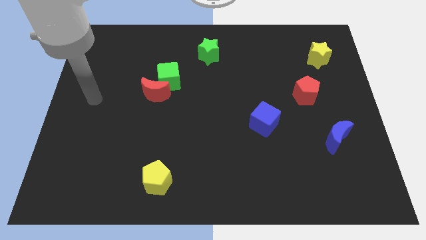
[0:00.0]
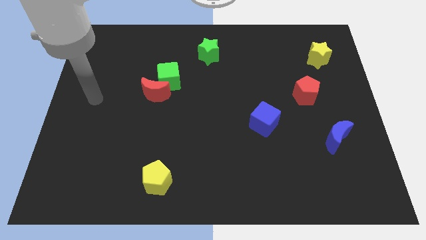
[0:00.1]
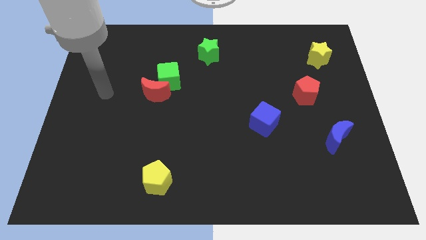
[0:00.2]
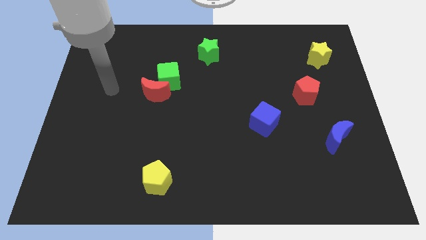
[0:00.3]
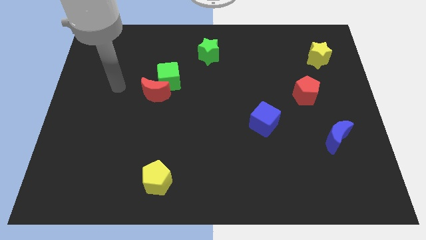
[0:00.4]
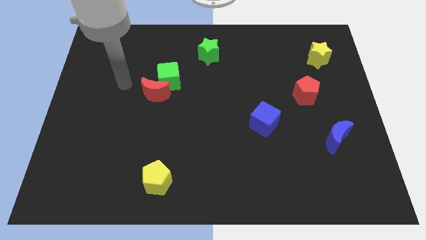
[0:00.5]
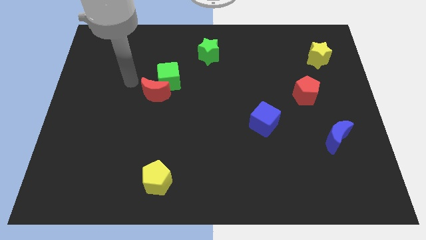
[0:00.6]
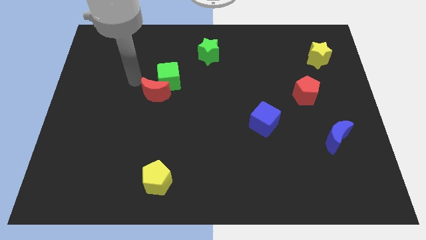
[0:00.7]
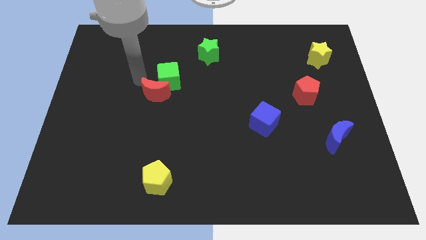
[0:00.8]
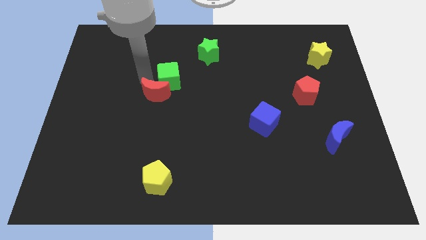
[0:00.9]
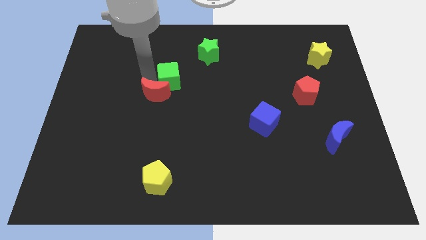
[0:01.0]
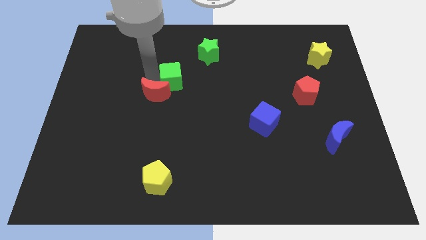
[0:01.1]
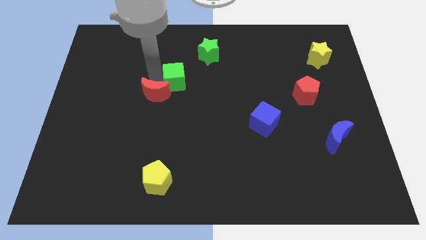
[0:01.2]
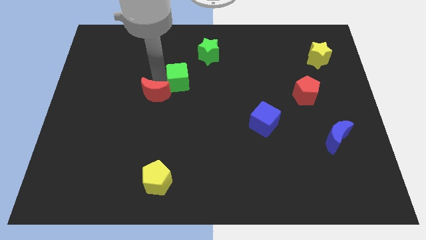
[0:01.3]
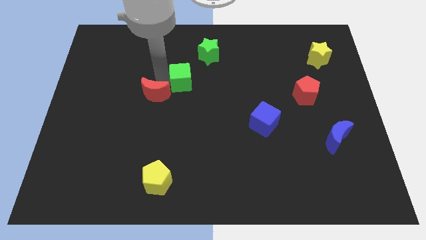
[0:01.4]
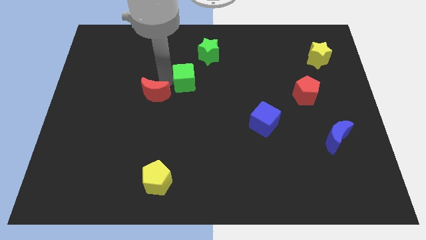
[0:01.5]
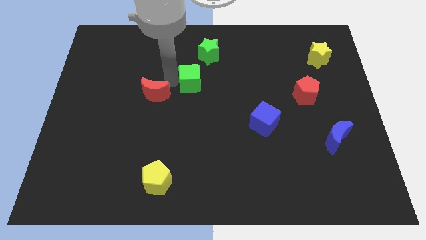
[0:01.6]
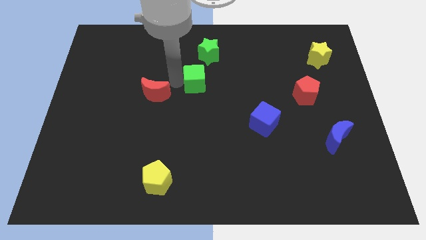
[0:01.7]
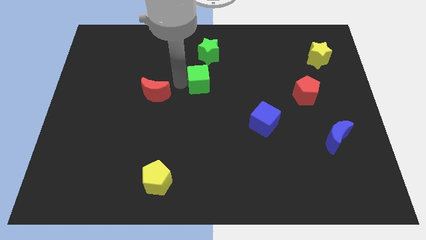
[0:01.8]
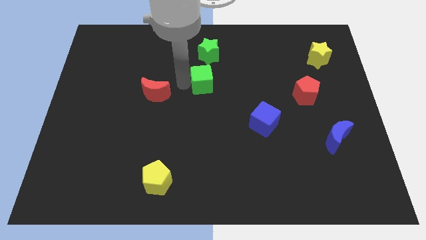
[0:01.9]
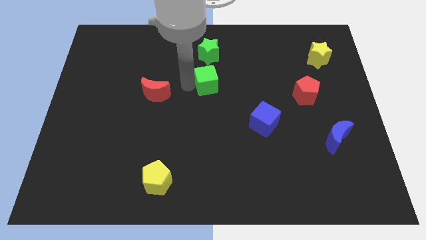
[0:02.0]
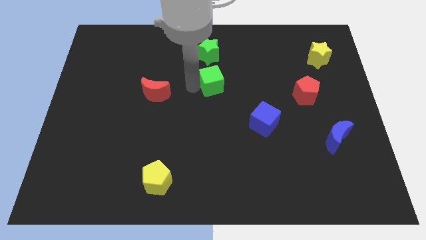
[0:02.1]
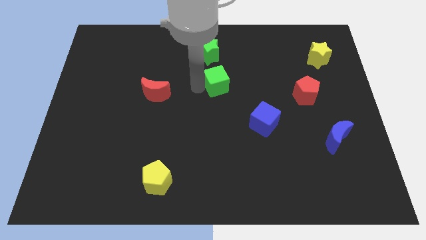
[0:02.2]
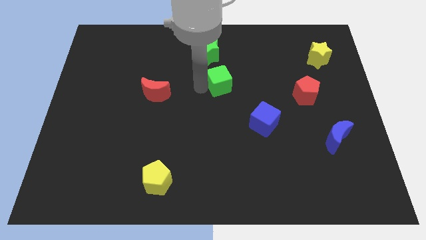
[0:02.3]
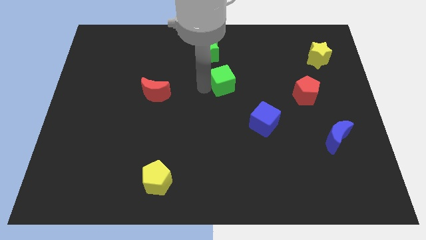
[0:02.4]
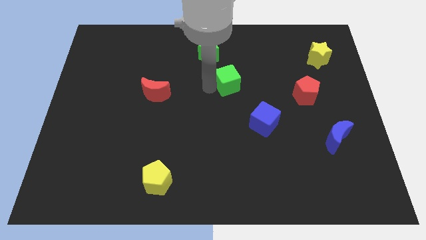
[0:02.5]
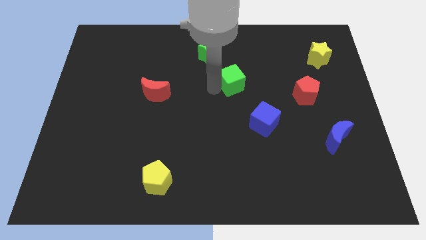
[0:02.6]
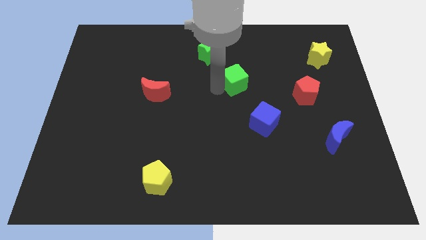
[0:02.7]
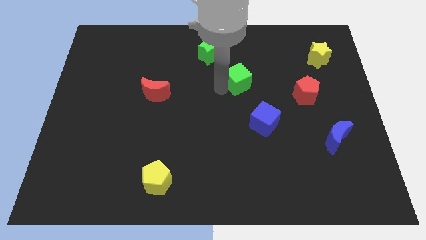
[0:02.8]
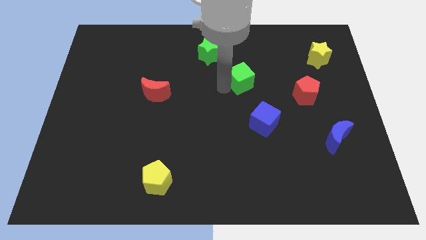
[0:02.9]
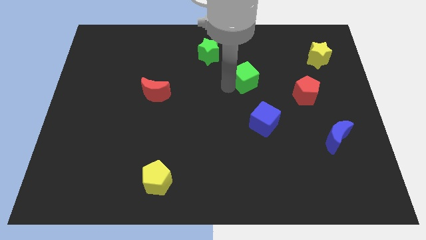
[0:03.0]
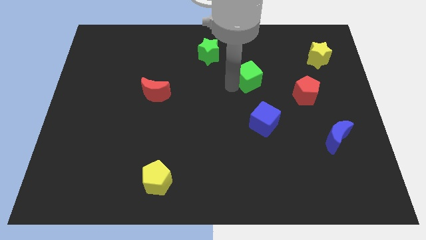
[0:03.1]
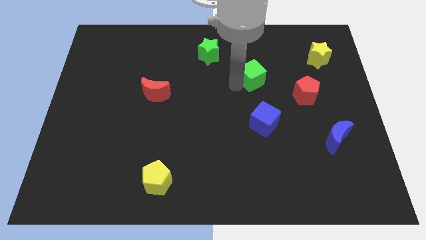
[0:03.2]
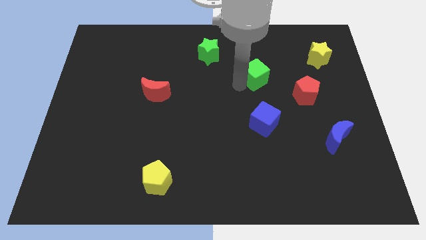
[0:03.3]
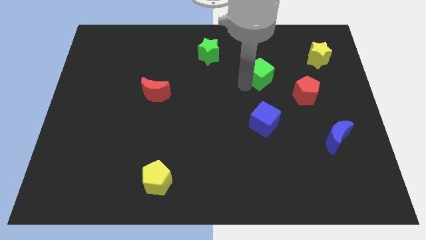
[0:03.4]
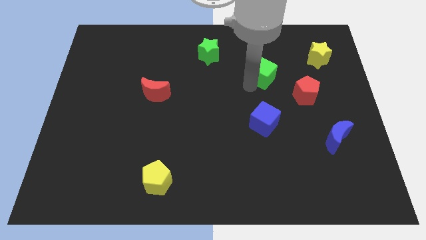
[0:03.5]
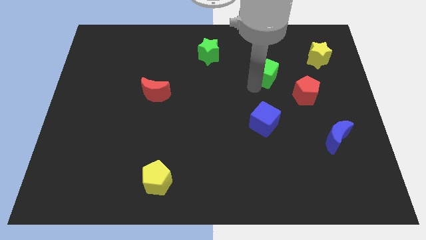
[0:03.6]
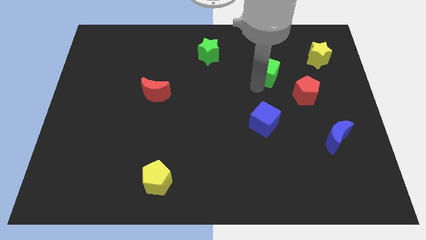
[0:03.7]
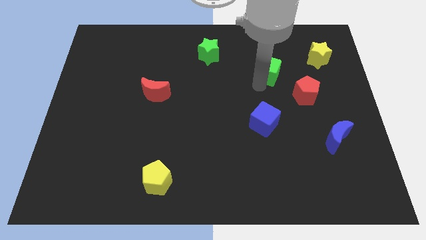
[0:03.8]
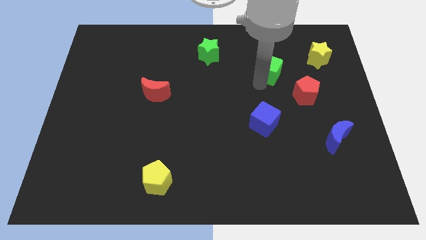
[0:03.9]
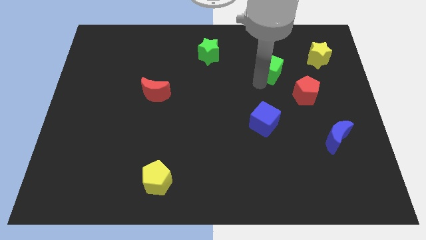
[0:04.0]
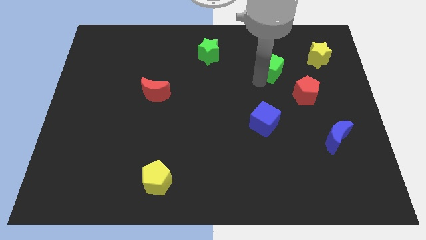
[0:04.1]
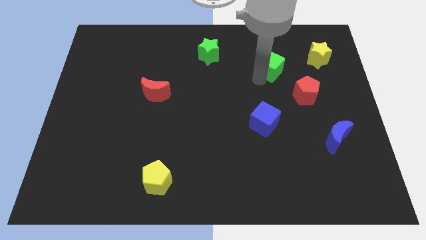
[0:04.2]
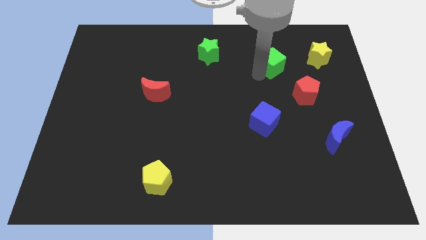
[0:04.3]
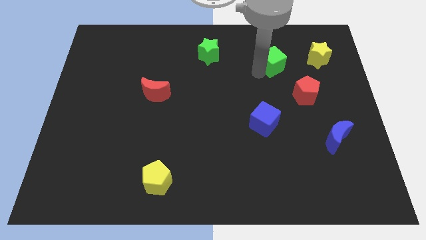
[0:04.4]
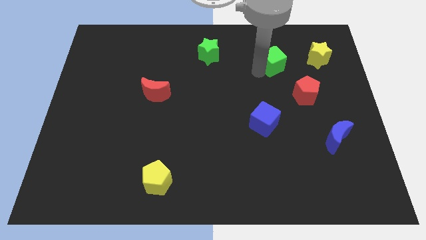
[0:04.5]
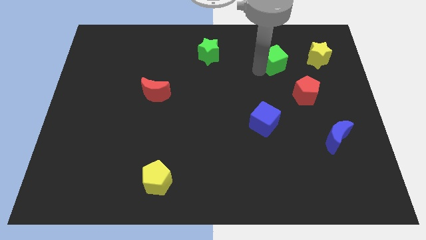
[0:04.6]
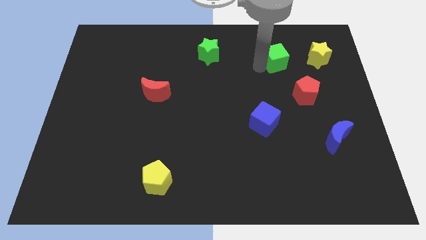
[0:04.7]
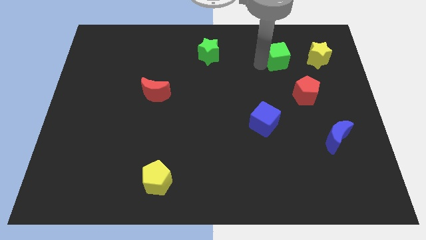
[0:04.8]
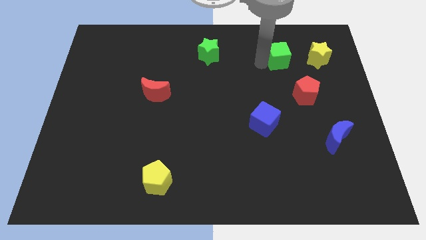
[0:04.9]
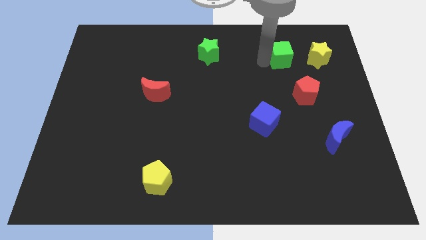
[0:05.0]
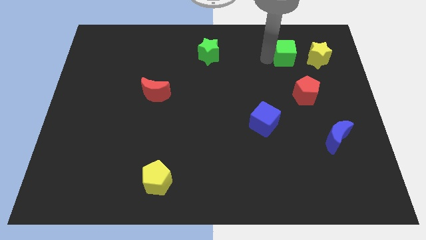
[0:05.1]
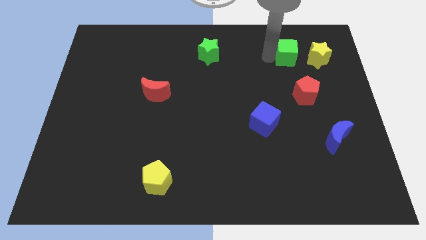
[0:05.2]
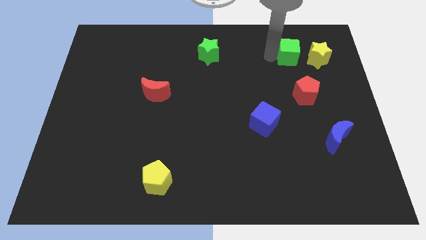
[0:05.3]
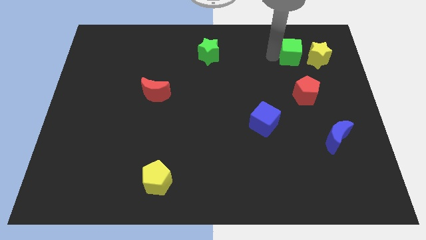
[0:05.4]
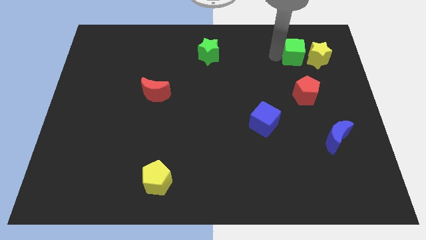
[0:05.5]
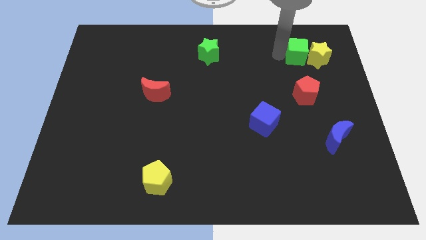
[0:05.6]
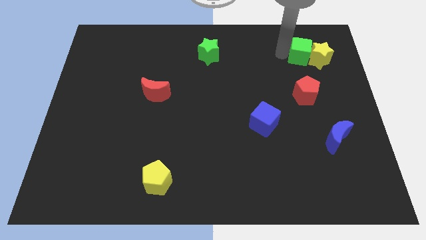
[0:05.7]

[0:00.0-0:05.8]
move the green cube towards the yellow star

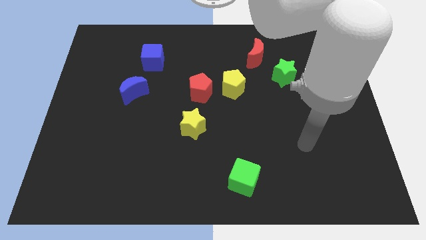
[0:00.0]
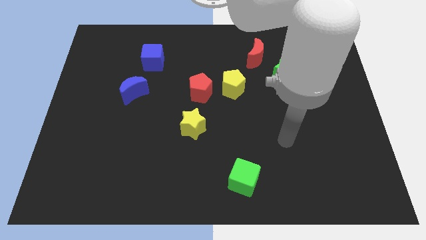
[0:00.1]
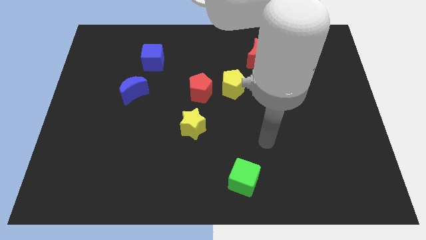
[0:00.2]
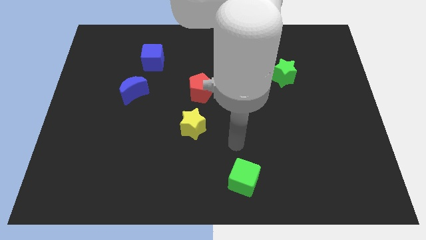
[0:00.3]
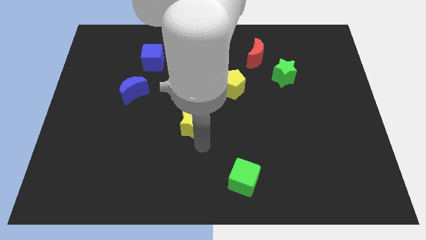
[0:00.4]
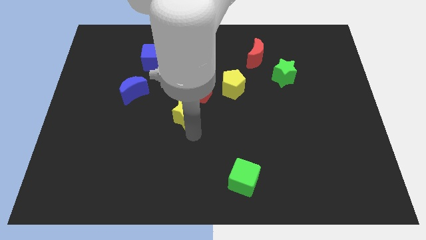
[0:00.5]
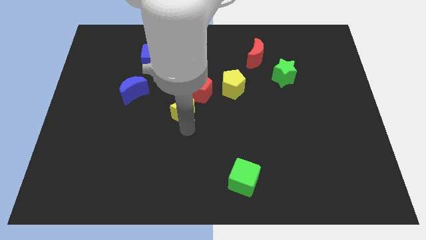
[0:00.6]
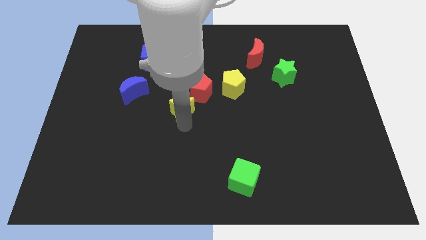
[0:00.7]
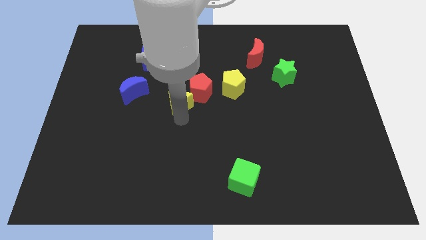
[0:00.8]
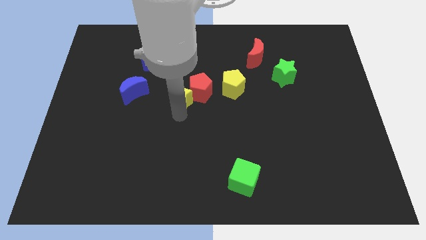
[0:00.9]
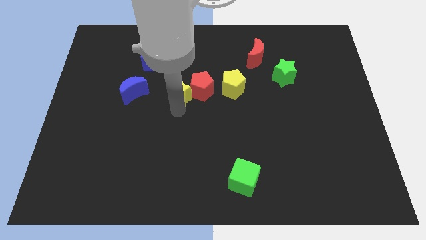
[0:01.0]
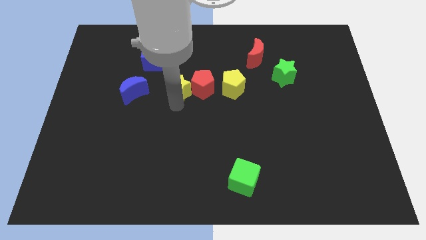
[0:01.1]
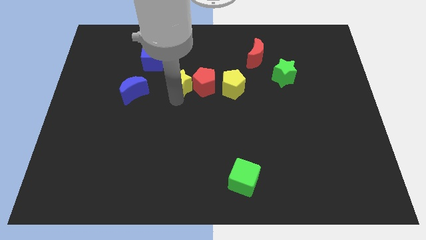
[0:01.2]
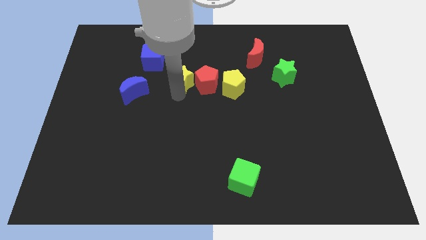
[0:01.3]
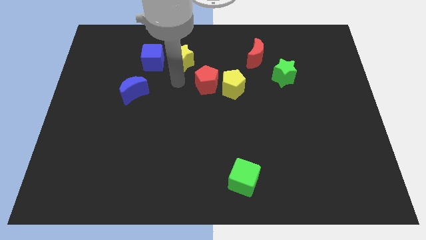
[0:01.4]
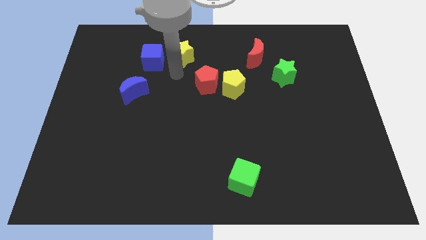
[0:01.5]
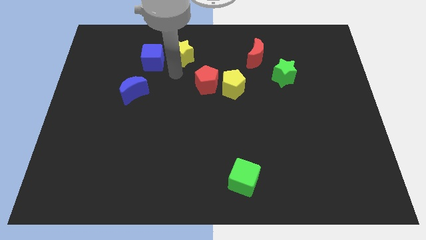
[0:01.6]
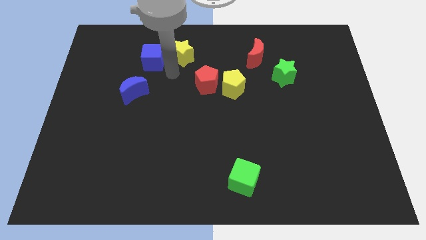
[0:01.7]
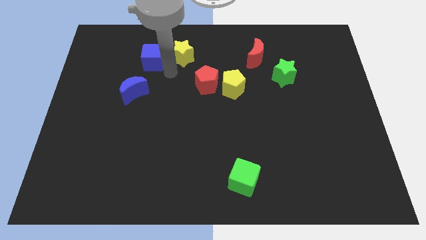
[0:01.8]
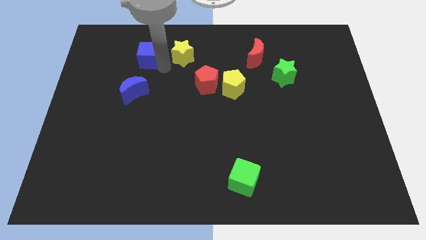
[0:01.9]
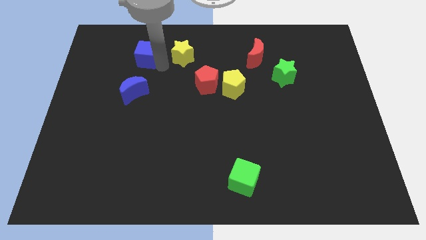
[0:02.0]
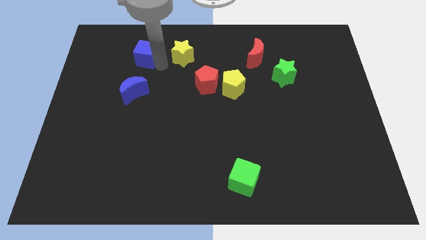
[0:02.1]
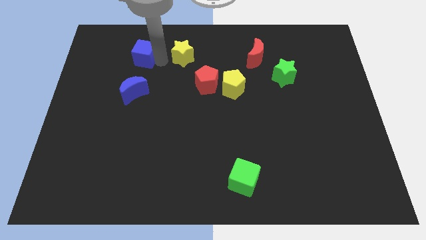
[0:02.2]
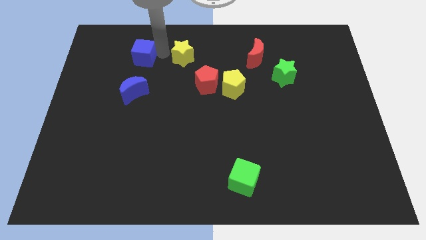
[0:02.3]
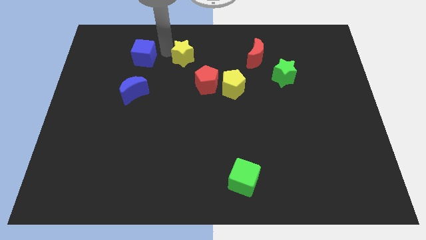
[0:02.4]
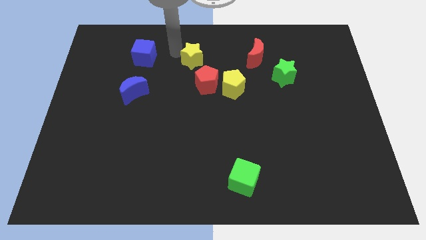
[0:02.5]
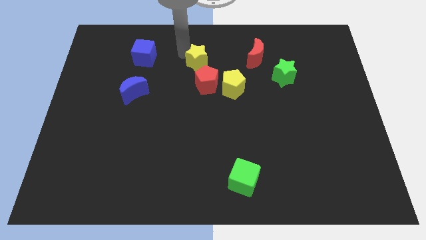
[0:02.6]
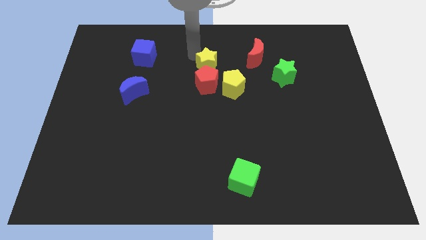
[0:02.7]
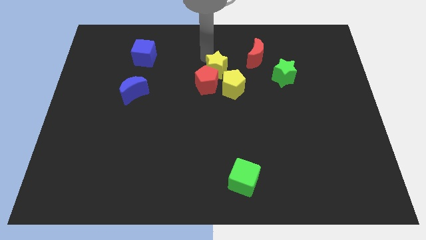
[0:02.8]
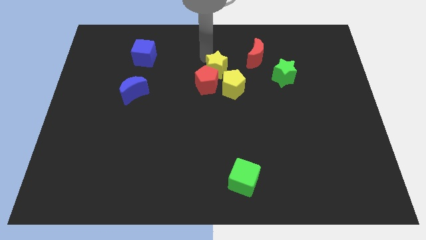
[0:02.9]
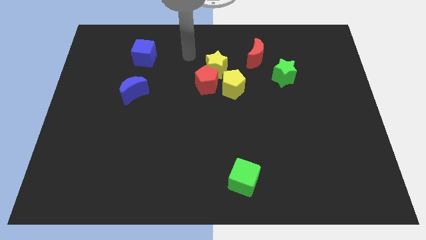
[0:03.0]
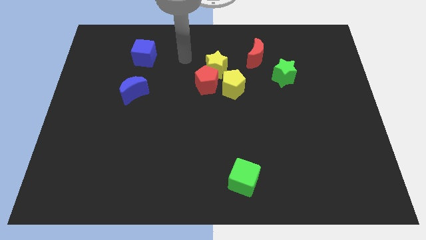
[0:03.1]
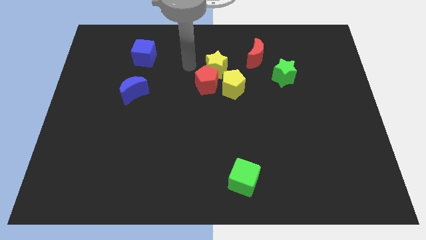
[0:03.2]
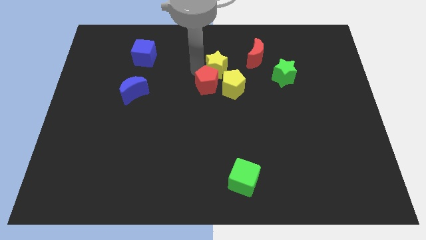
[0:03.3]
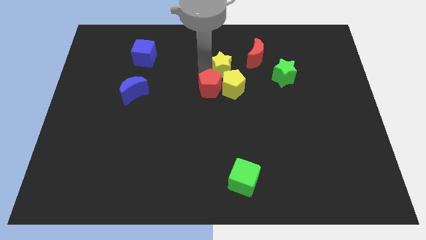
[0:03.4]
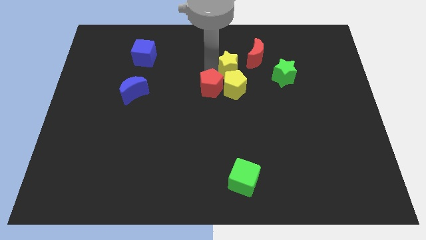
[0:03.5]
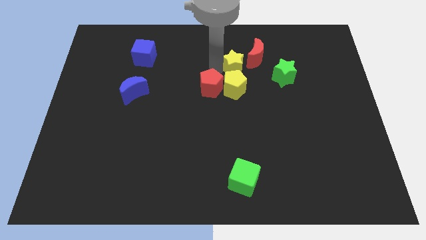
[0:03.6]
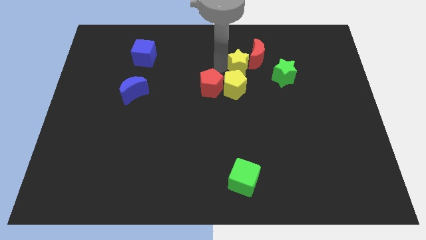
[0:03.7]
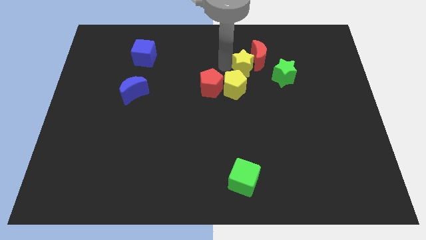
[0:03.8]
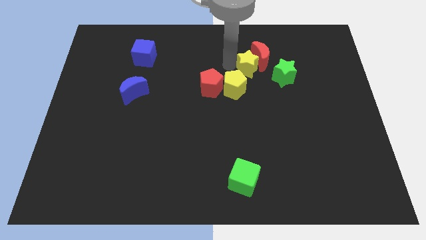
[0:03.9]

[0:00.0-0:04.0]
put the yellow star close to the red moon
